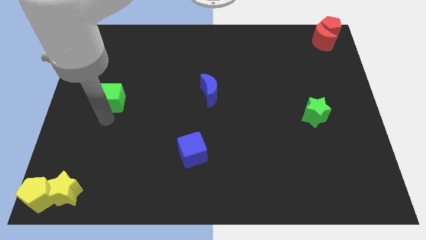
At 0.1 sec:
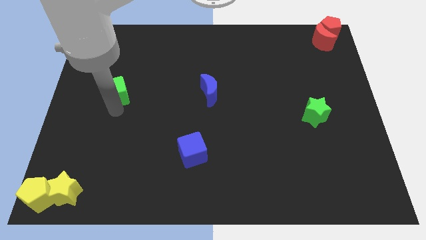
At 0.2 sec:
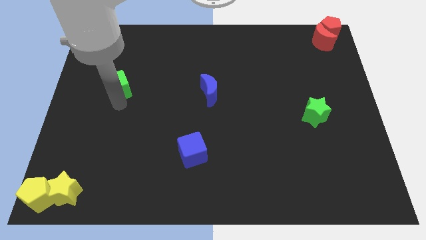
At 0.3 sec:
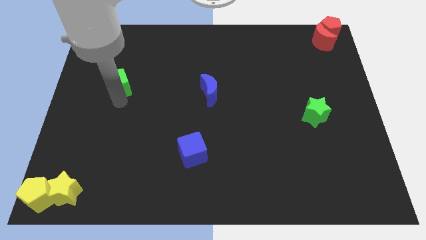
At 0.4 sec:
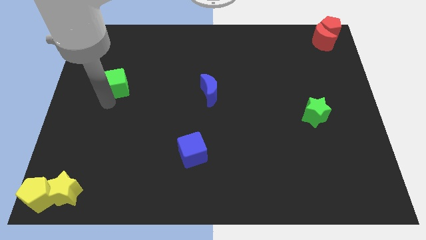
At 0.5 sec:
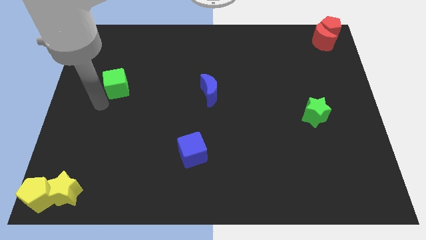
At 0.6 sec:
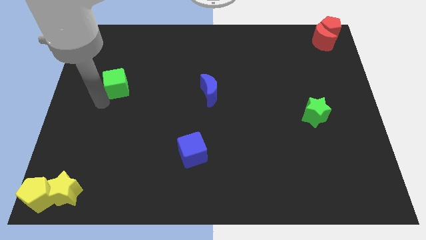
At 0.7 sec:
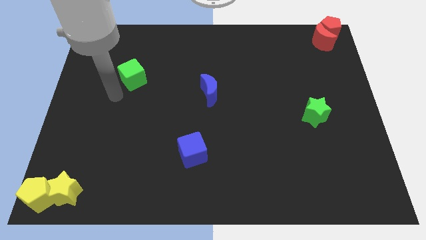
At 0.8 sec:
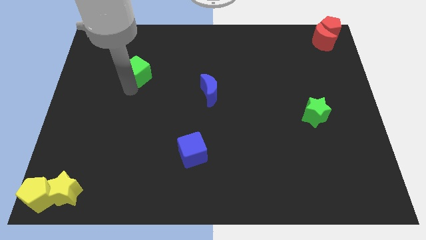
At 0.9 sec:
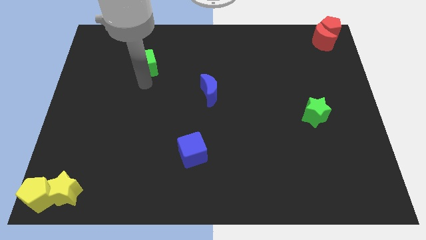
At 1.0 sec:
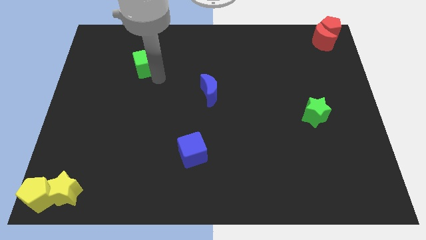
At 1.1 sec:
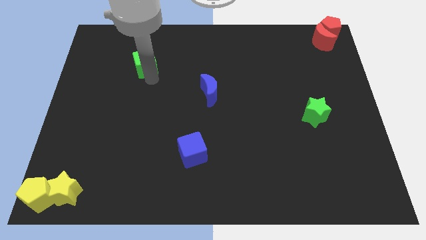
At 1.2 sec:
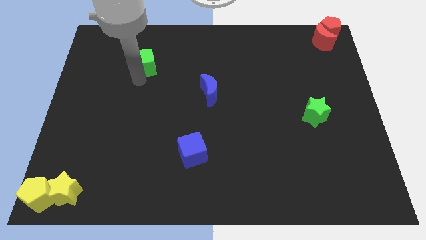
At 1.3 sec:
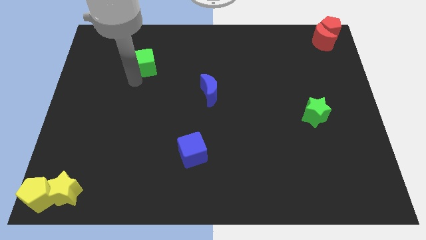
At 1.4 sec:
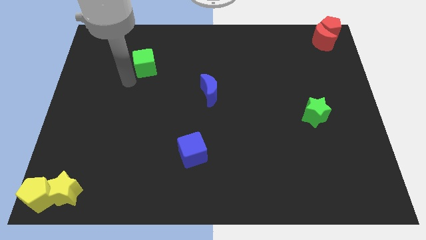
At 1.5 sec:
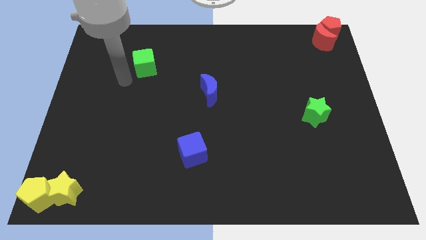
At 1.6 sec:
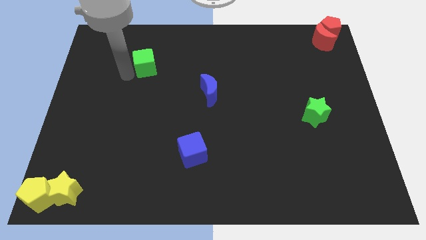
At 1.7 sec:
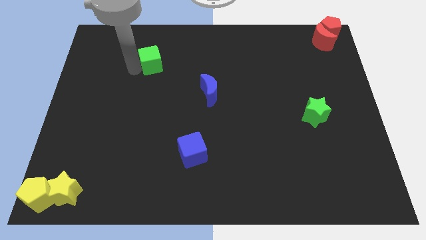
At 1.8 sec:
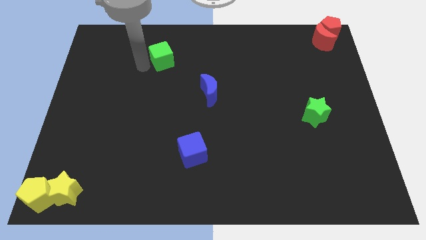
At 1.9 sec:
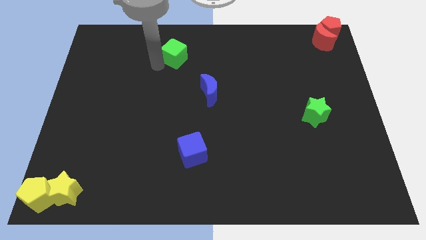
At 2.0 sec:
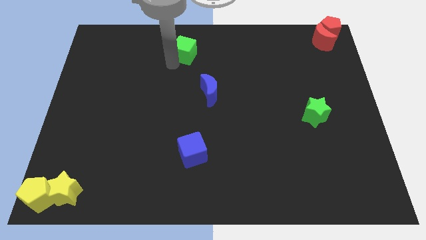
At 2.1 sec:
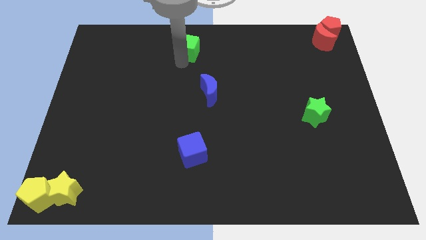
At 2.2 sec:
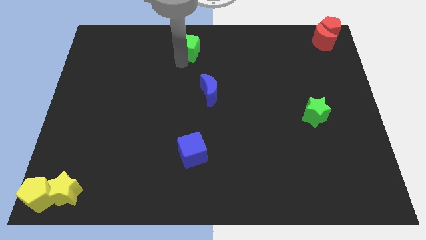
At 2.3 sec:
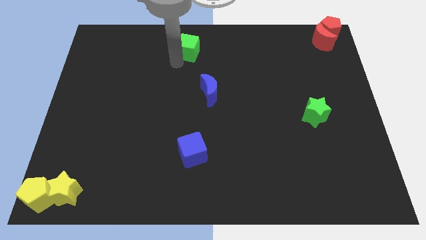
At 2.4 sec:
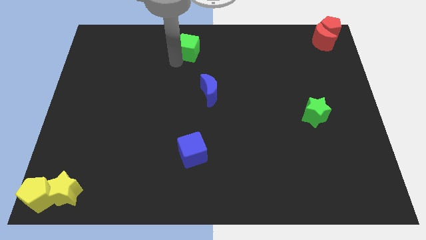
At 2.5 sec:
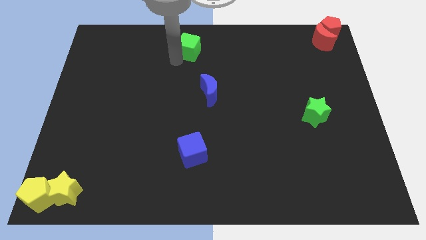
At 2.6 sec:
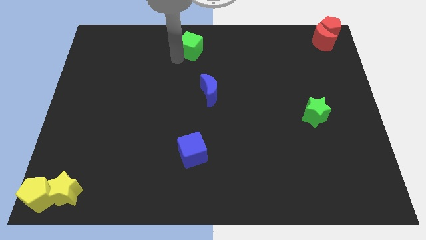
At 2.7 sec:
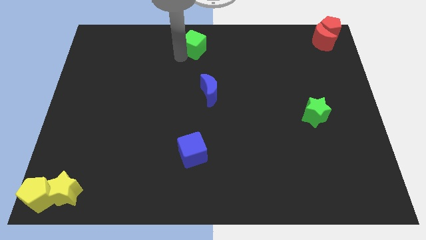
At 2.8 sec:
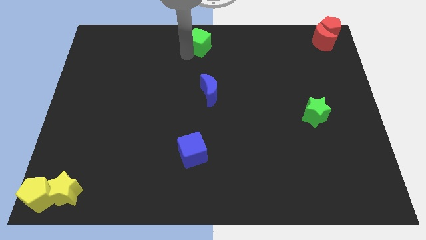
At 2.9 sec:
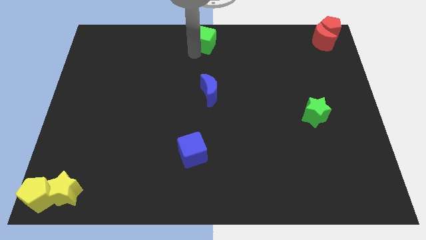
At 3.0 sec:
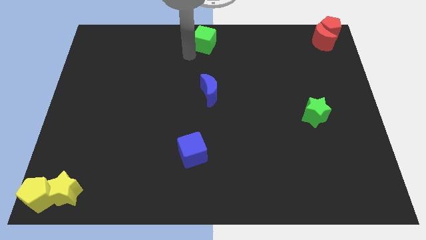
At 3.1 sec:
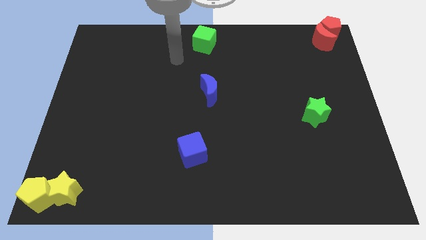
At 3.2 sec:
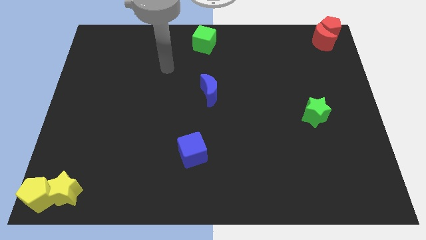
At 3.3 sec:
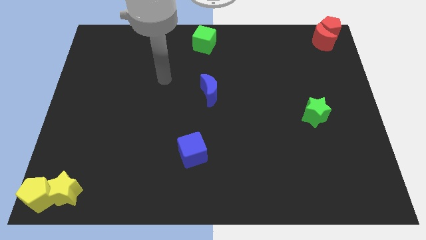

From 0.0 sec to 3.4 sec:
place the green cube to the top center of the board

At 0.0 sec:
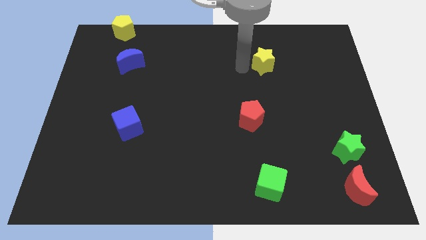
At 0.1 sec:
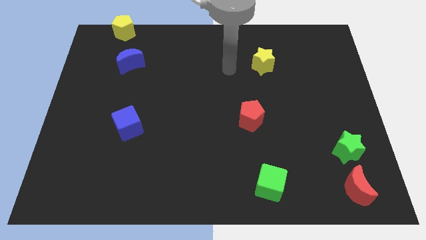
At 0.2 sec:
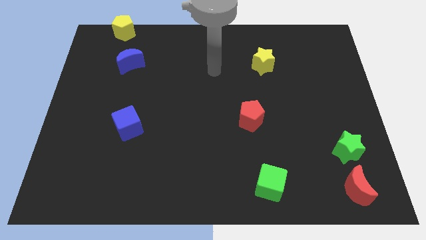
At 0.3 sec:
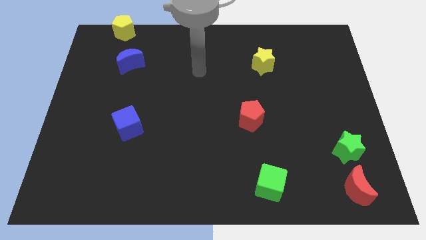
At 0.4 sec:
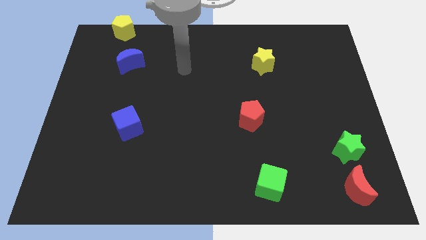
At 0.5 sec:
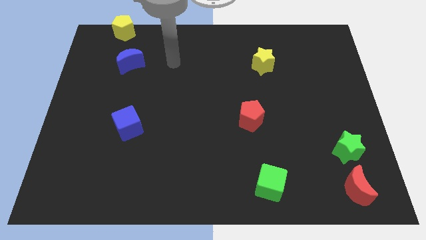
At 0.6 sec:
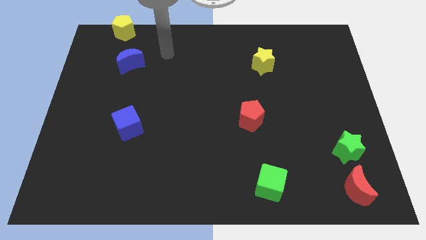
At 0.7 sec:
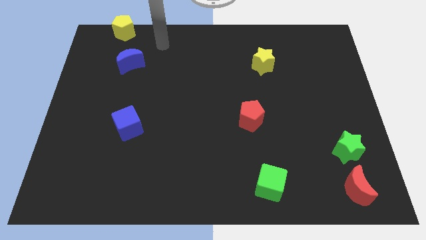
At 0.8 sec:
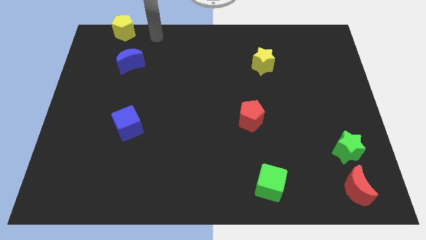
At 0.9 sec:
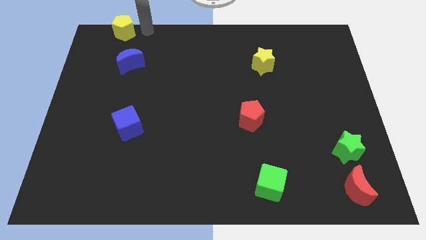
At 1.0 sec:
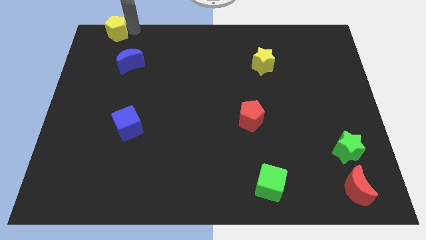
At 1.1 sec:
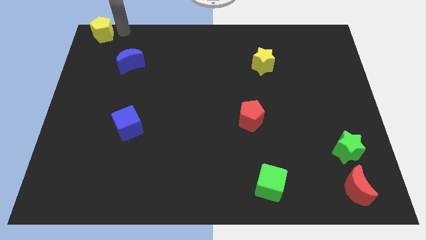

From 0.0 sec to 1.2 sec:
place arm on right side of yellow pentagon

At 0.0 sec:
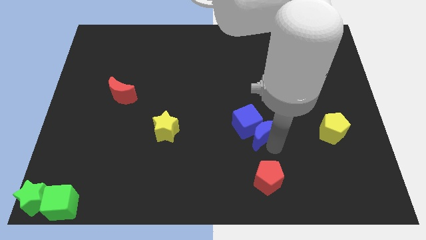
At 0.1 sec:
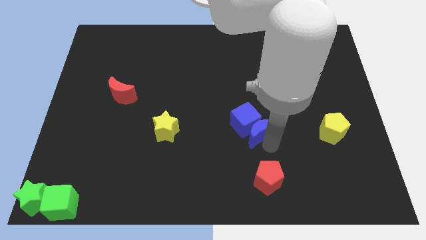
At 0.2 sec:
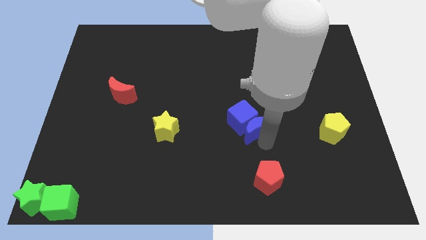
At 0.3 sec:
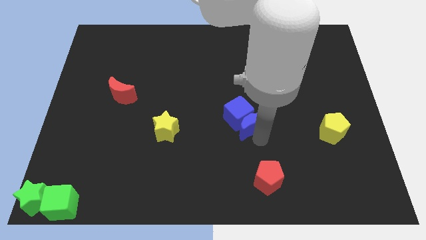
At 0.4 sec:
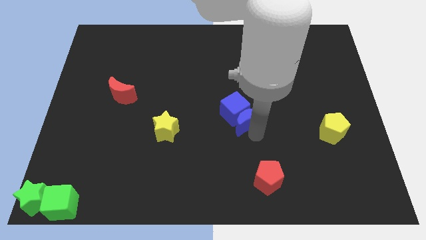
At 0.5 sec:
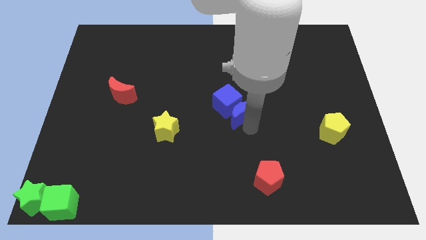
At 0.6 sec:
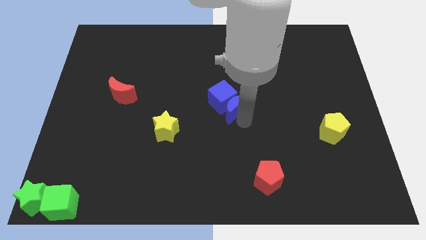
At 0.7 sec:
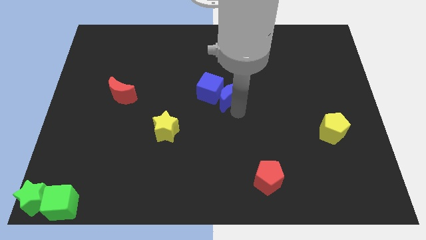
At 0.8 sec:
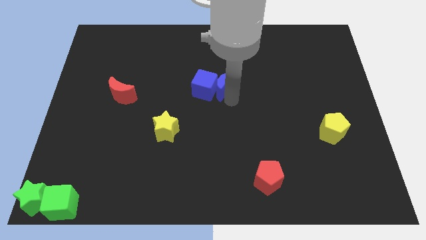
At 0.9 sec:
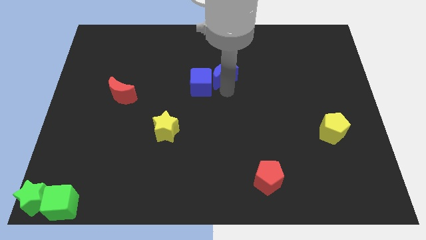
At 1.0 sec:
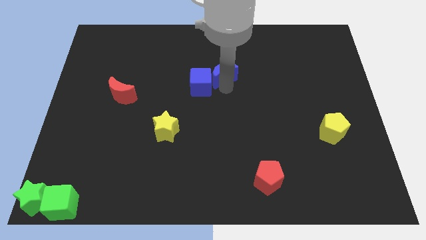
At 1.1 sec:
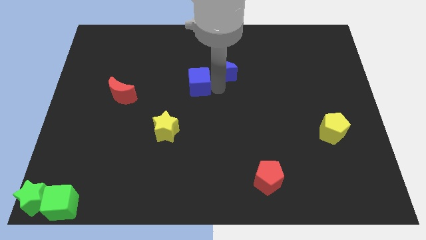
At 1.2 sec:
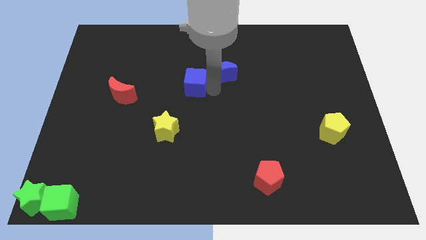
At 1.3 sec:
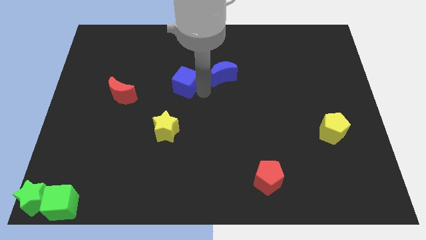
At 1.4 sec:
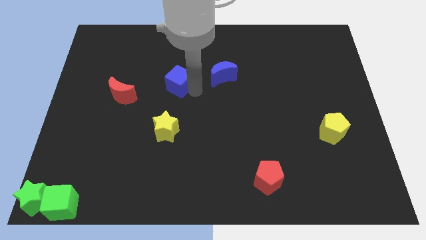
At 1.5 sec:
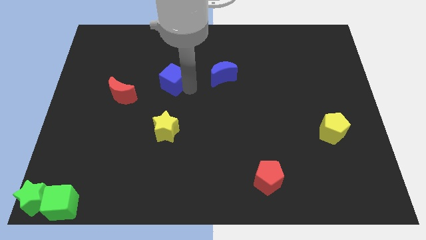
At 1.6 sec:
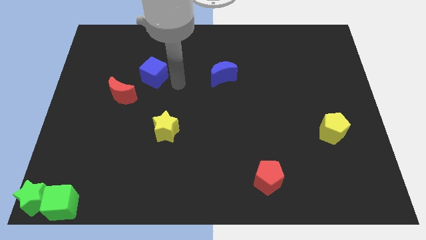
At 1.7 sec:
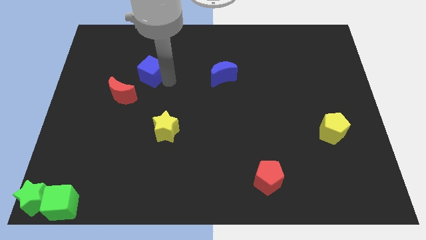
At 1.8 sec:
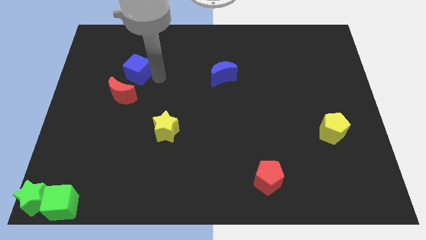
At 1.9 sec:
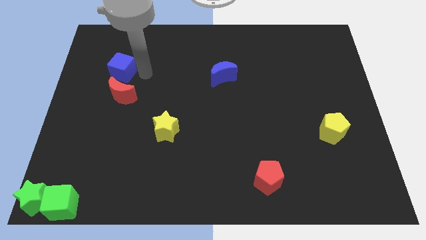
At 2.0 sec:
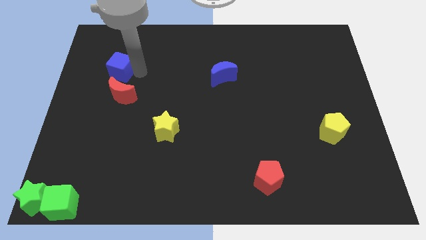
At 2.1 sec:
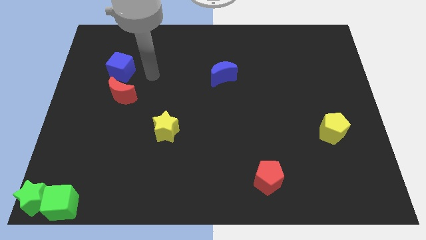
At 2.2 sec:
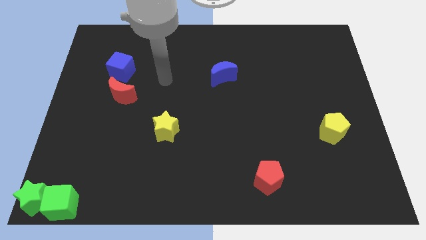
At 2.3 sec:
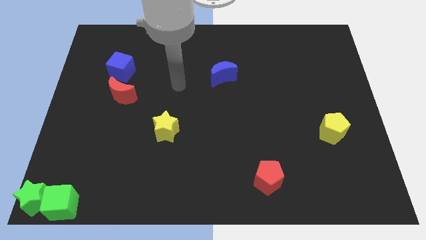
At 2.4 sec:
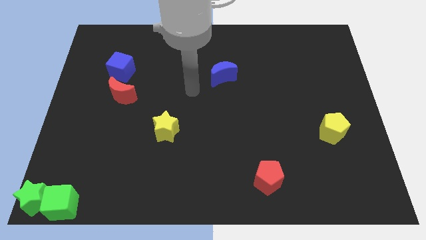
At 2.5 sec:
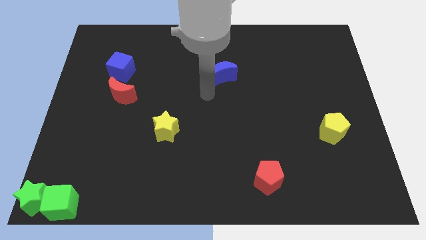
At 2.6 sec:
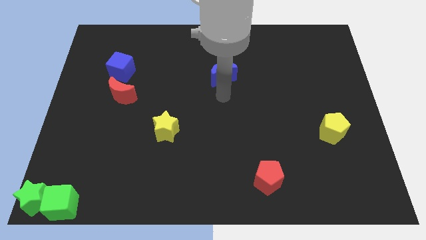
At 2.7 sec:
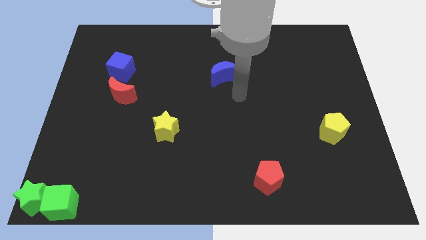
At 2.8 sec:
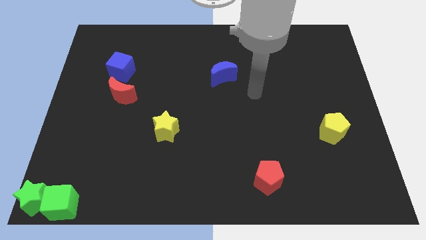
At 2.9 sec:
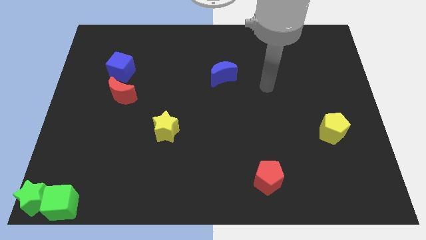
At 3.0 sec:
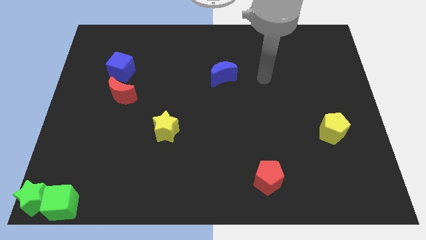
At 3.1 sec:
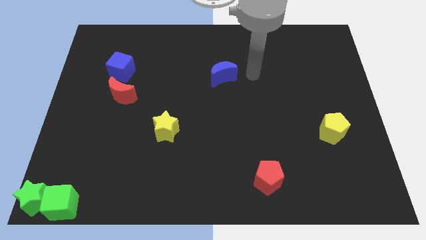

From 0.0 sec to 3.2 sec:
separate blue cube from blue moon

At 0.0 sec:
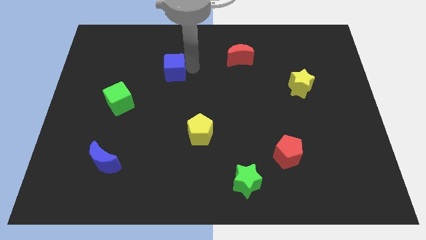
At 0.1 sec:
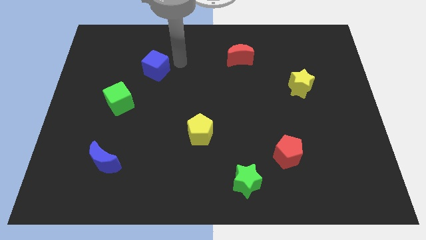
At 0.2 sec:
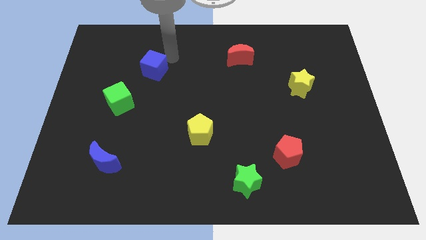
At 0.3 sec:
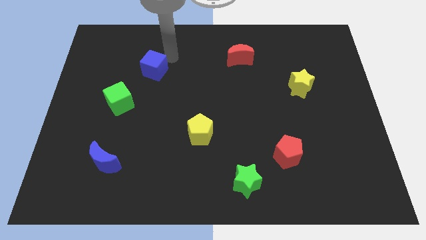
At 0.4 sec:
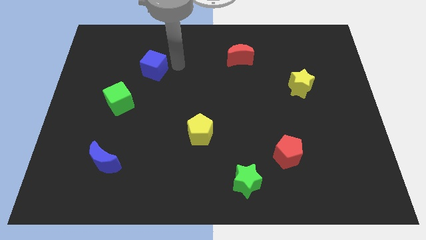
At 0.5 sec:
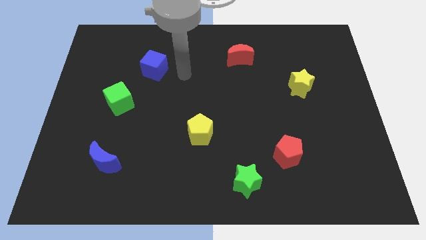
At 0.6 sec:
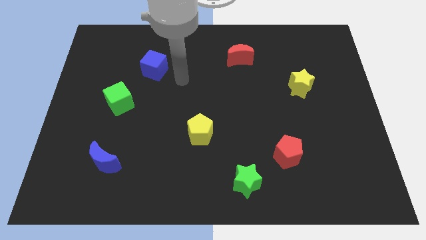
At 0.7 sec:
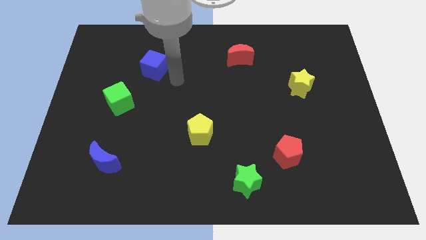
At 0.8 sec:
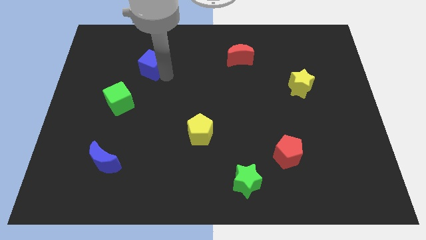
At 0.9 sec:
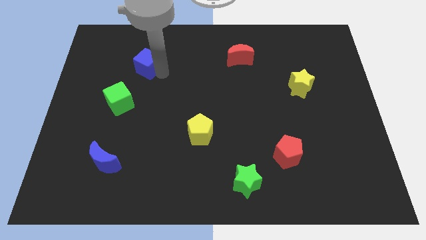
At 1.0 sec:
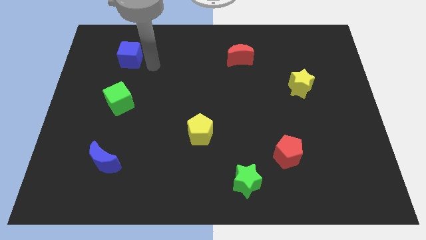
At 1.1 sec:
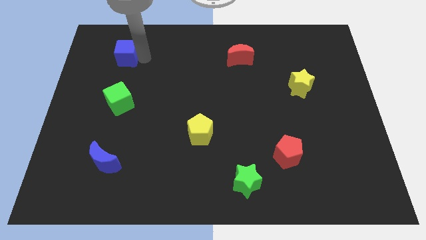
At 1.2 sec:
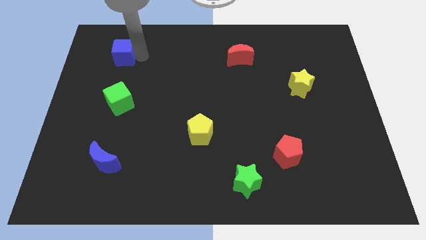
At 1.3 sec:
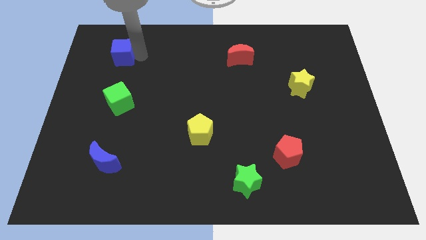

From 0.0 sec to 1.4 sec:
place the blue cube vertically above the green cube
